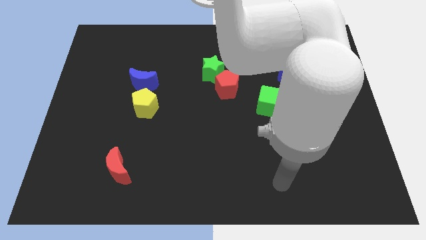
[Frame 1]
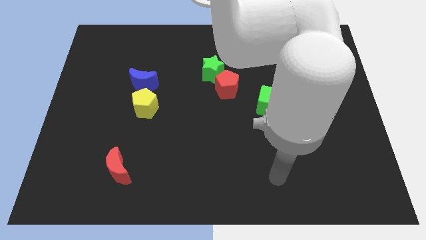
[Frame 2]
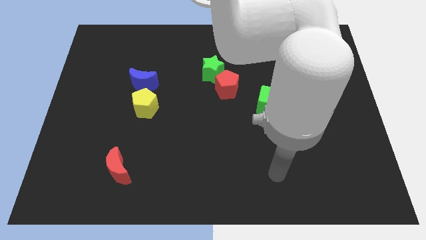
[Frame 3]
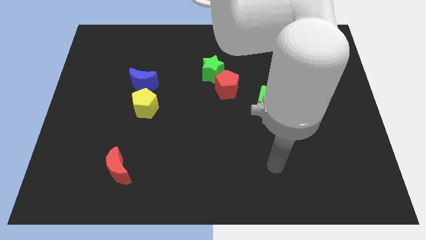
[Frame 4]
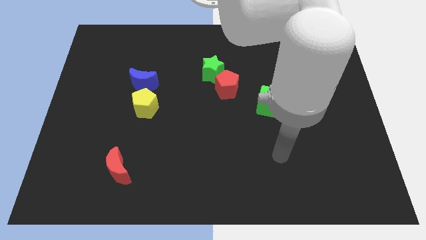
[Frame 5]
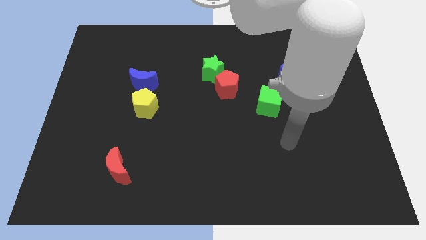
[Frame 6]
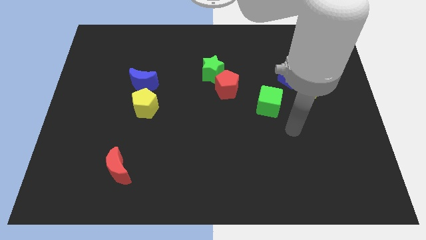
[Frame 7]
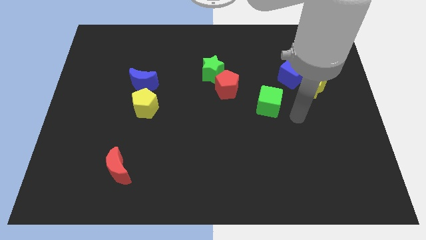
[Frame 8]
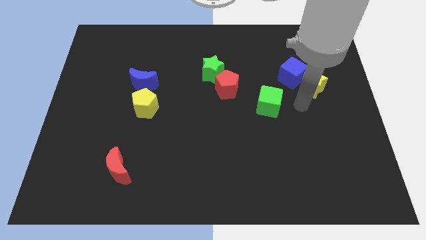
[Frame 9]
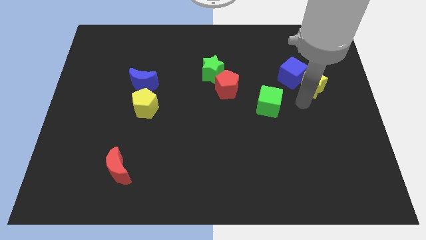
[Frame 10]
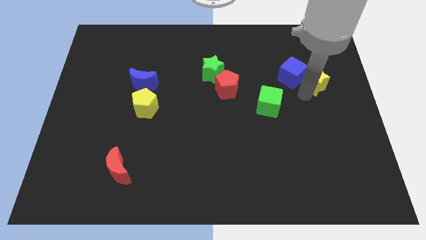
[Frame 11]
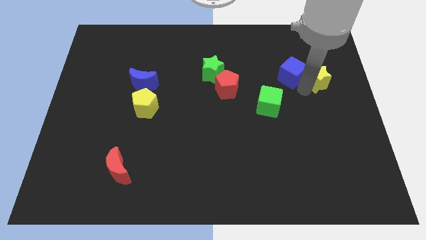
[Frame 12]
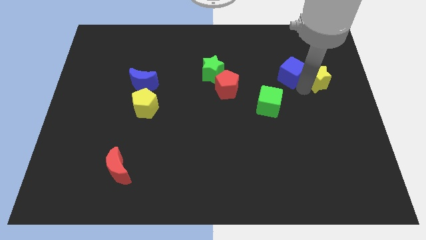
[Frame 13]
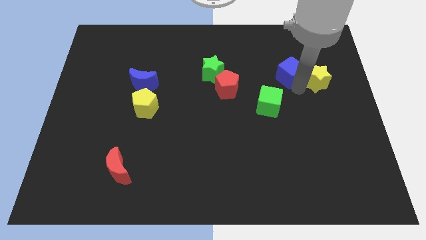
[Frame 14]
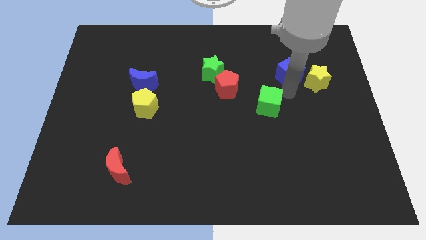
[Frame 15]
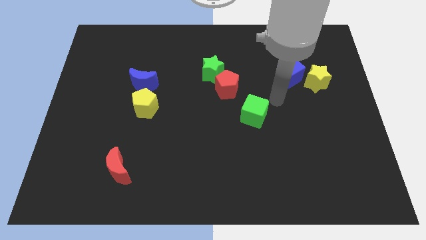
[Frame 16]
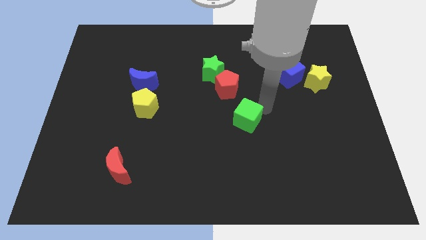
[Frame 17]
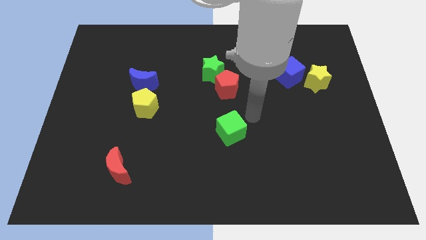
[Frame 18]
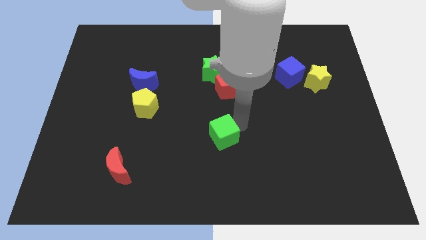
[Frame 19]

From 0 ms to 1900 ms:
slightly move the green cube towards the left side of the board

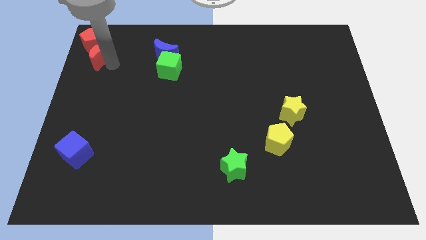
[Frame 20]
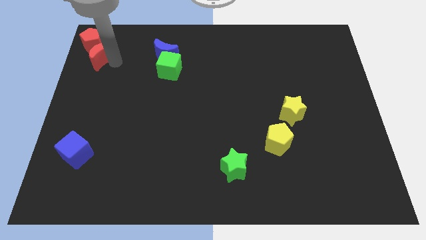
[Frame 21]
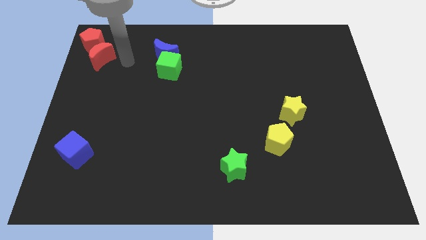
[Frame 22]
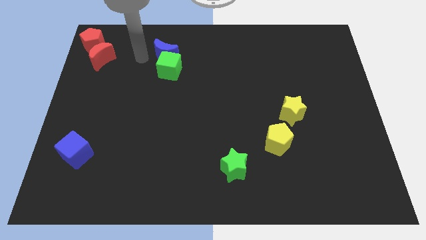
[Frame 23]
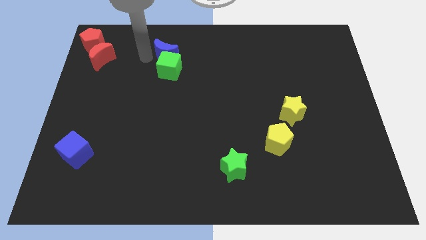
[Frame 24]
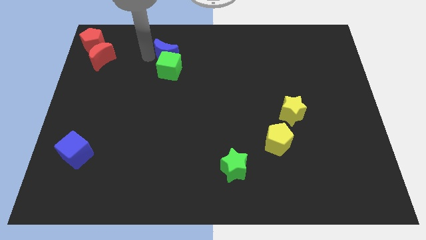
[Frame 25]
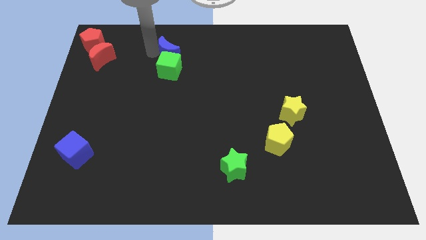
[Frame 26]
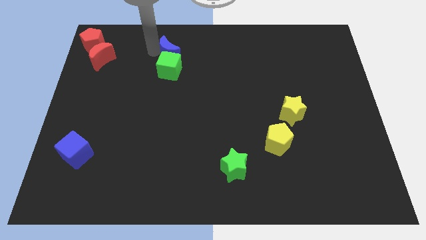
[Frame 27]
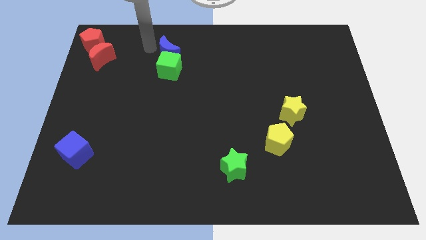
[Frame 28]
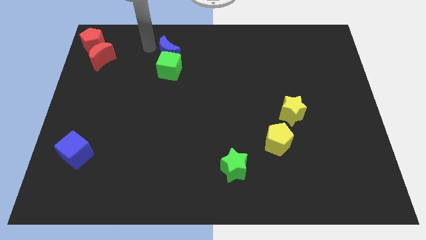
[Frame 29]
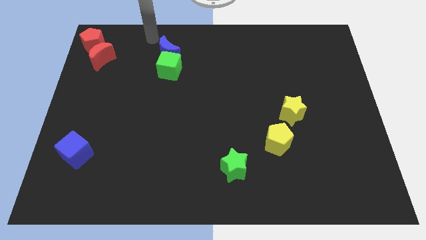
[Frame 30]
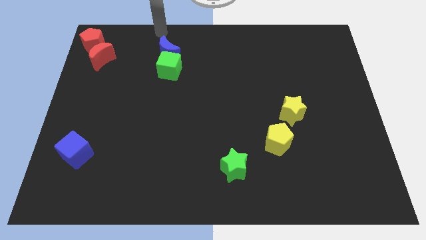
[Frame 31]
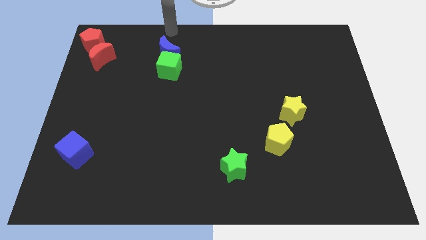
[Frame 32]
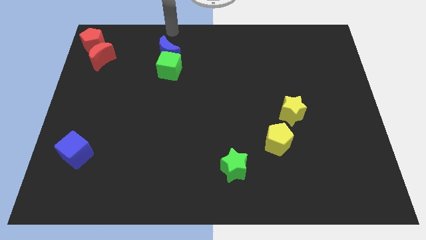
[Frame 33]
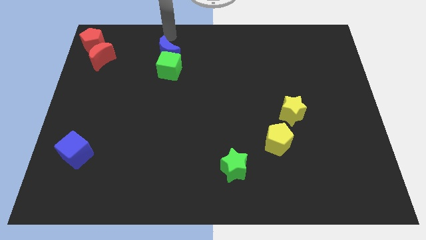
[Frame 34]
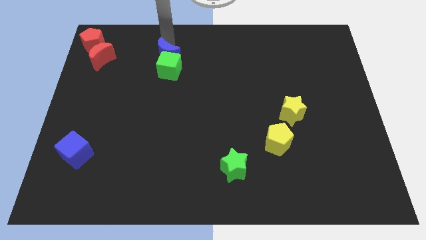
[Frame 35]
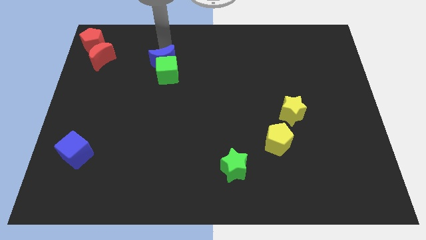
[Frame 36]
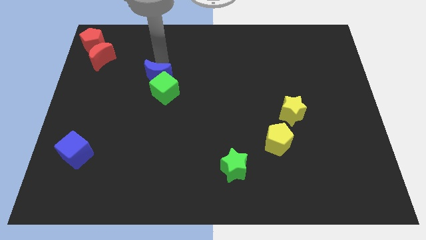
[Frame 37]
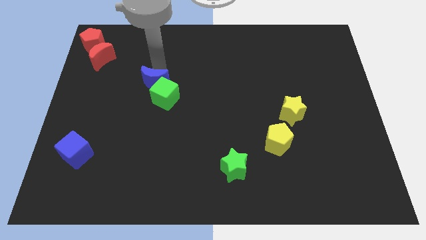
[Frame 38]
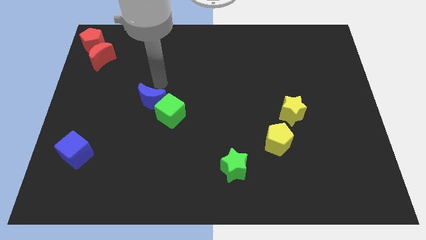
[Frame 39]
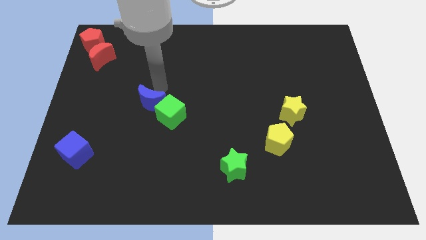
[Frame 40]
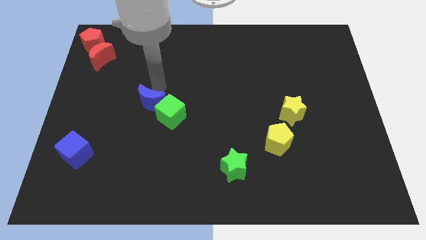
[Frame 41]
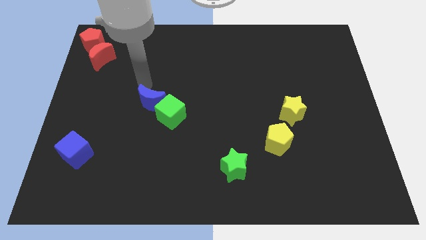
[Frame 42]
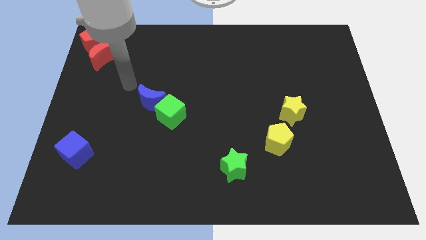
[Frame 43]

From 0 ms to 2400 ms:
push the blue crescent and the green cube to the center of the board

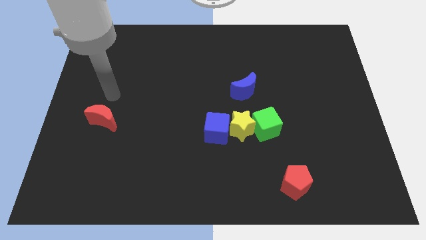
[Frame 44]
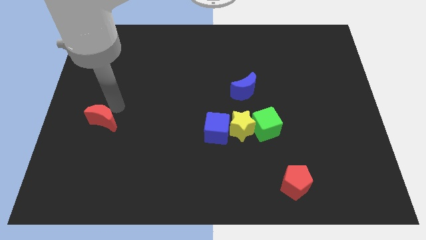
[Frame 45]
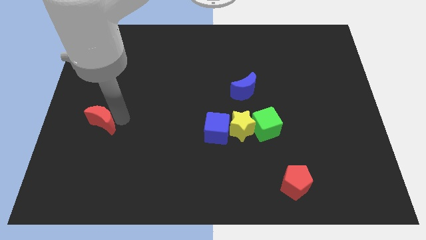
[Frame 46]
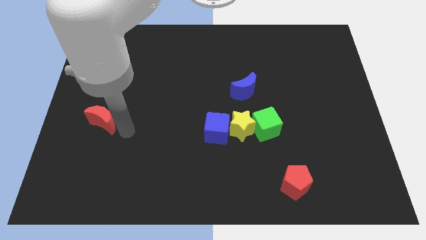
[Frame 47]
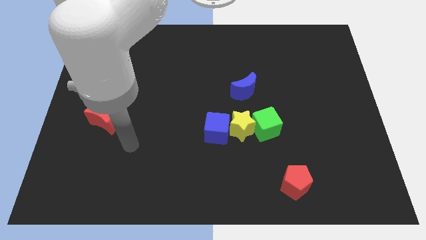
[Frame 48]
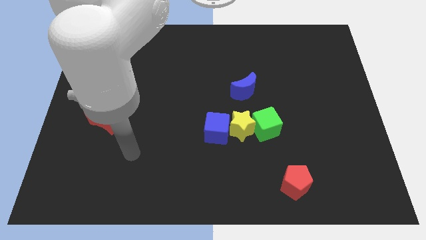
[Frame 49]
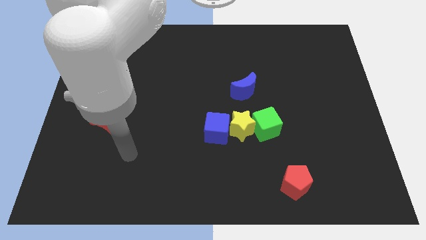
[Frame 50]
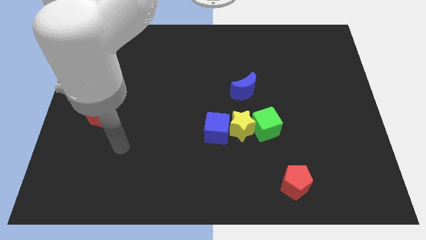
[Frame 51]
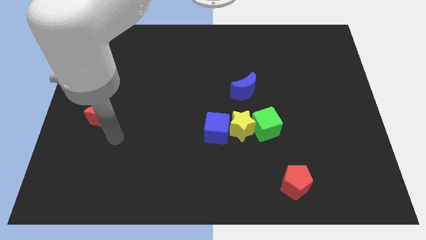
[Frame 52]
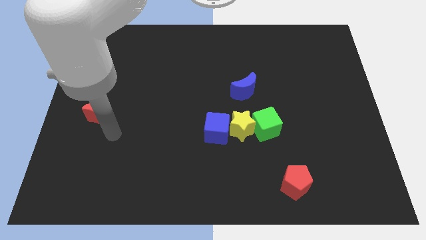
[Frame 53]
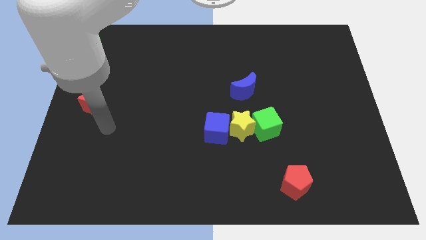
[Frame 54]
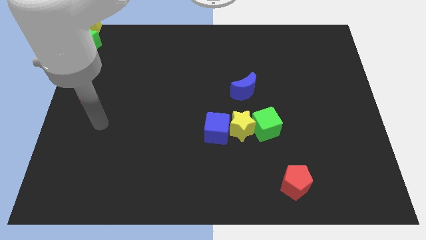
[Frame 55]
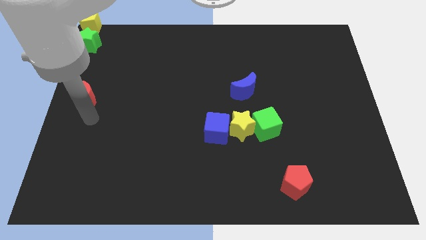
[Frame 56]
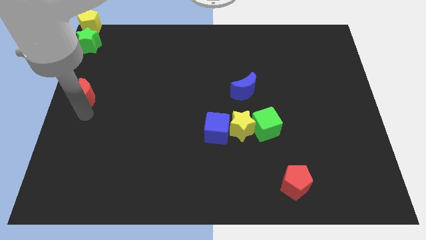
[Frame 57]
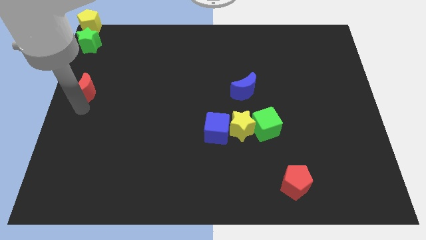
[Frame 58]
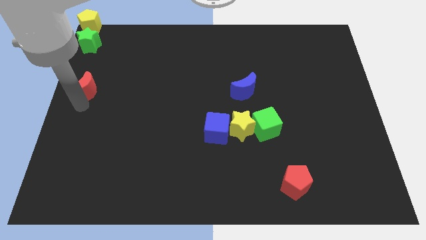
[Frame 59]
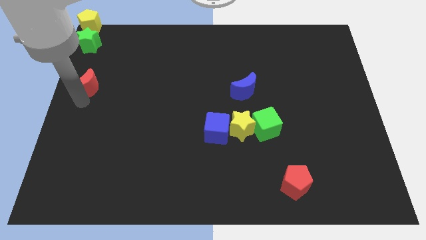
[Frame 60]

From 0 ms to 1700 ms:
move the red moon towards the green star

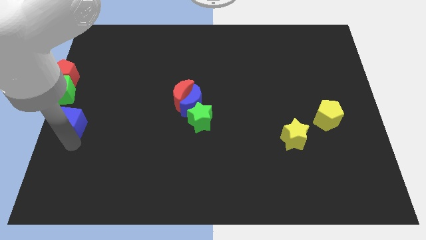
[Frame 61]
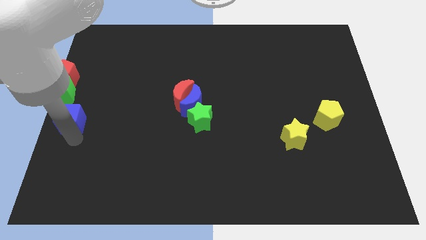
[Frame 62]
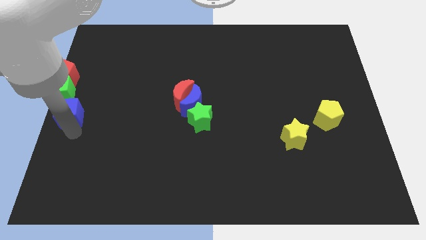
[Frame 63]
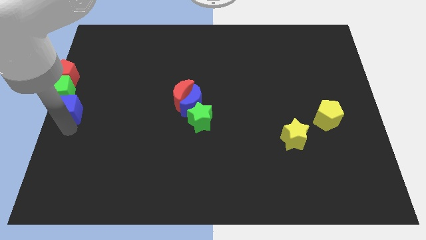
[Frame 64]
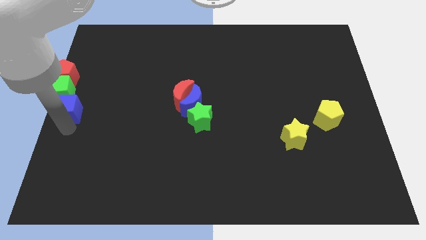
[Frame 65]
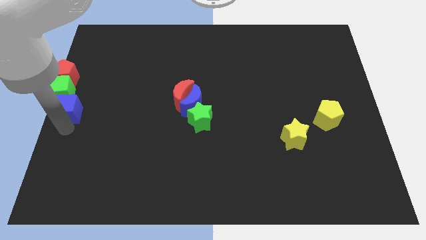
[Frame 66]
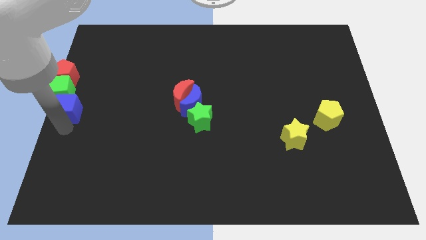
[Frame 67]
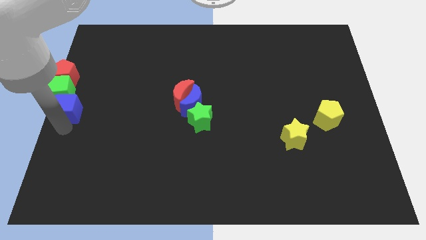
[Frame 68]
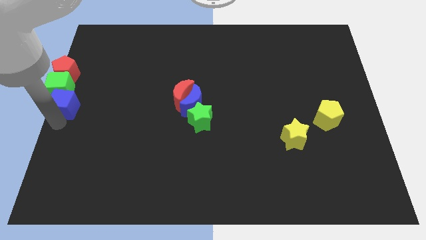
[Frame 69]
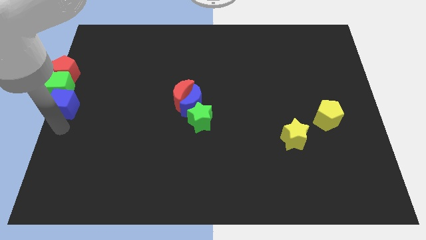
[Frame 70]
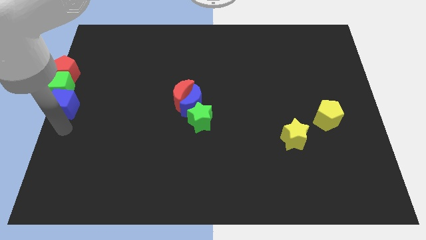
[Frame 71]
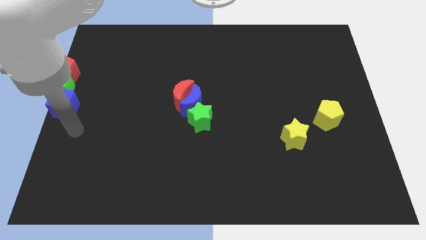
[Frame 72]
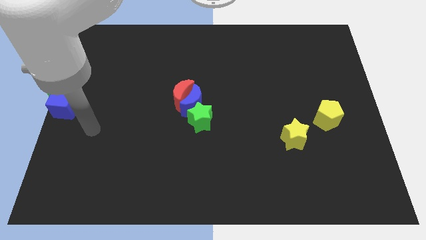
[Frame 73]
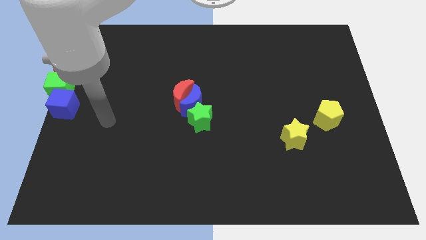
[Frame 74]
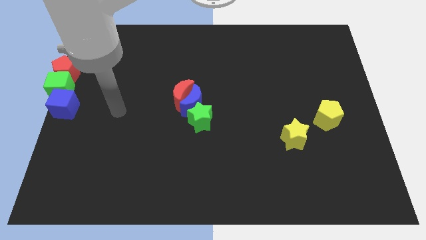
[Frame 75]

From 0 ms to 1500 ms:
push blue cube into green cube

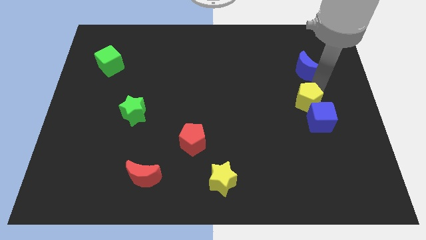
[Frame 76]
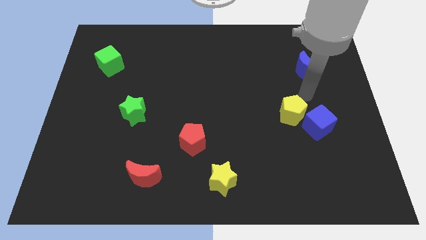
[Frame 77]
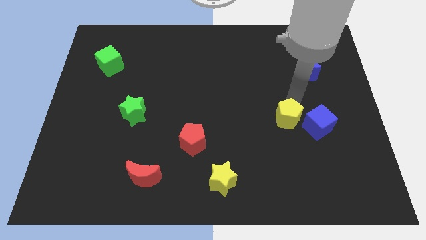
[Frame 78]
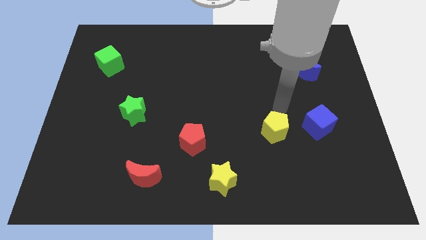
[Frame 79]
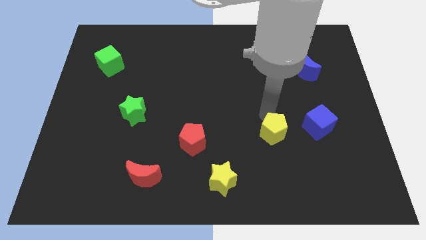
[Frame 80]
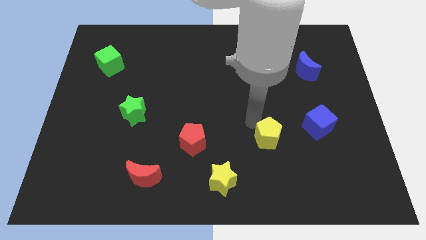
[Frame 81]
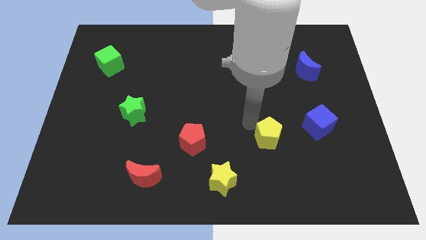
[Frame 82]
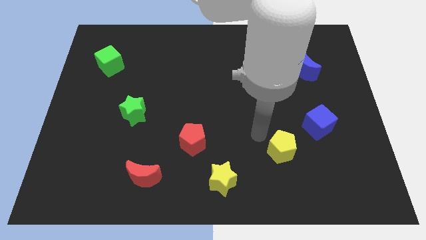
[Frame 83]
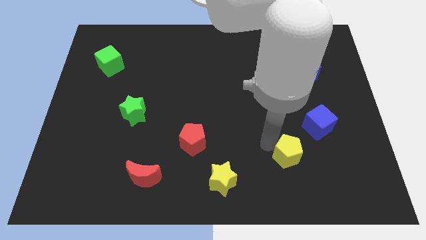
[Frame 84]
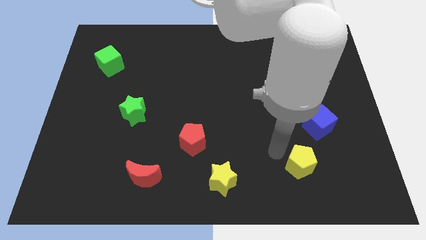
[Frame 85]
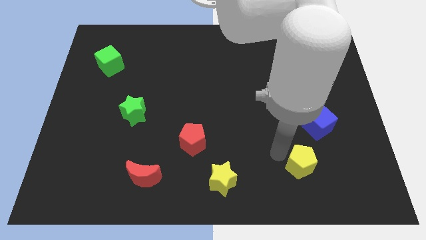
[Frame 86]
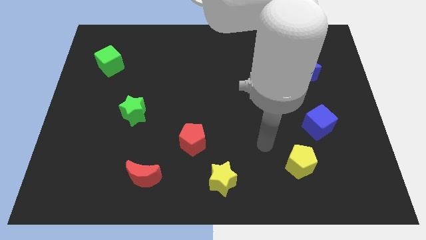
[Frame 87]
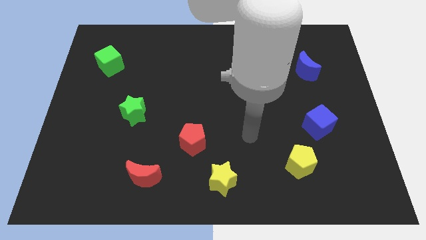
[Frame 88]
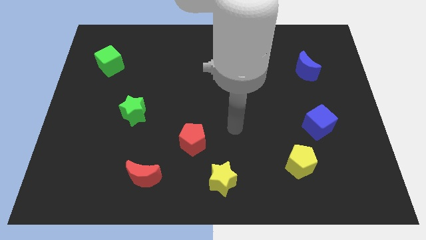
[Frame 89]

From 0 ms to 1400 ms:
push the yellow pentagon and the blue cube away from each other
